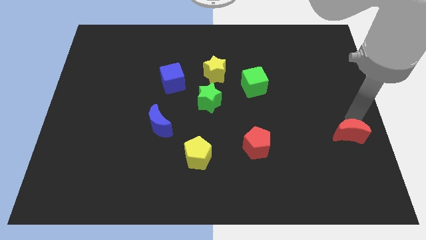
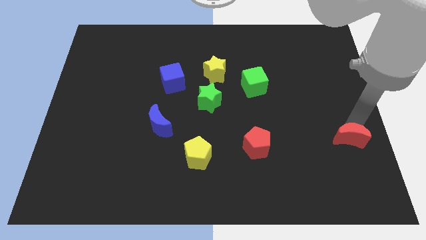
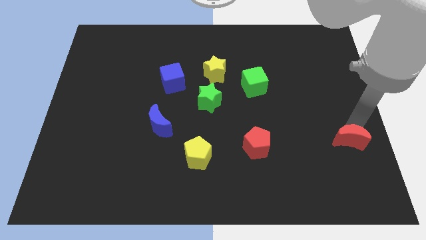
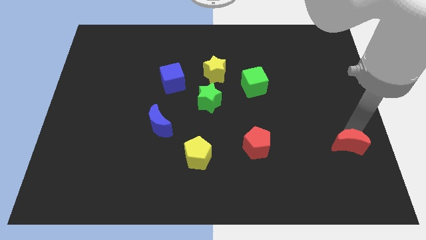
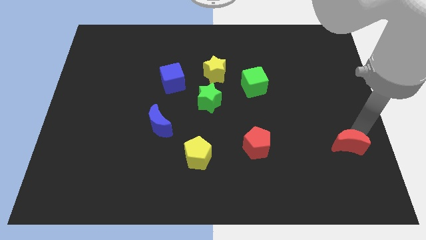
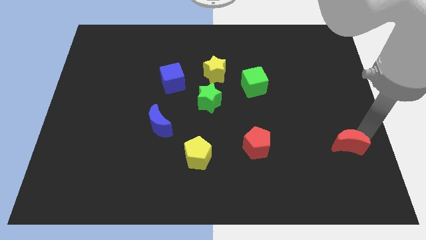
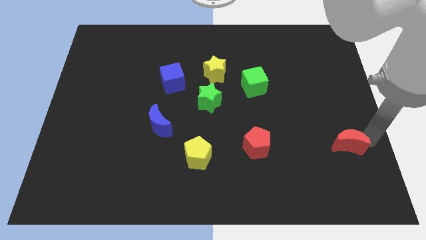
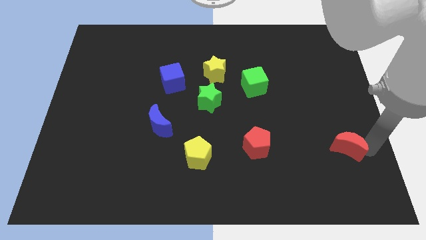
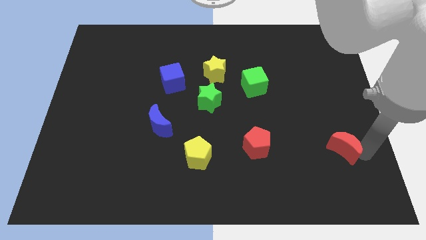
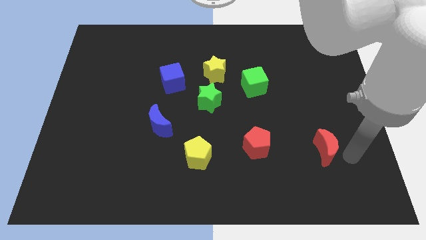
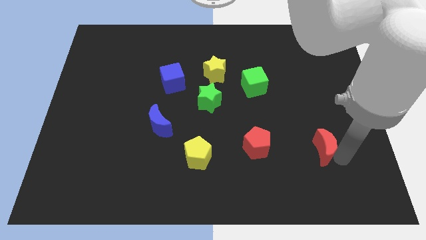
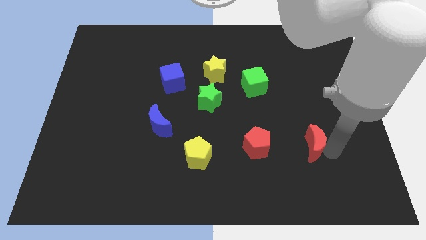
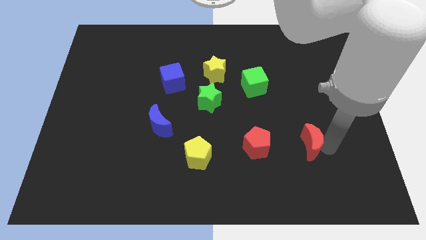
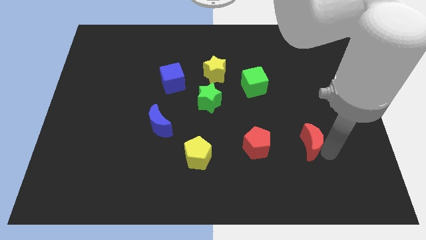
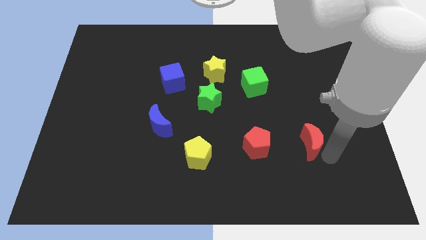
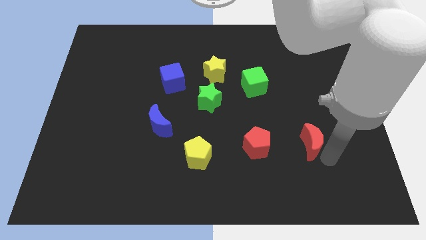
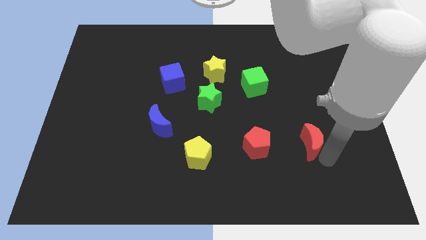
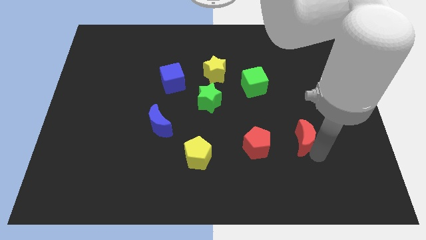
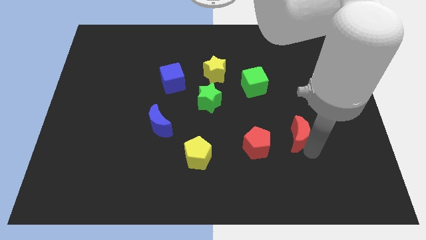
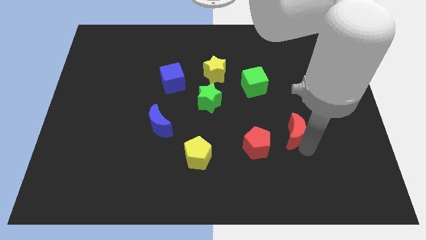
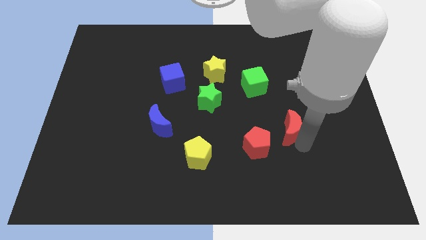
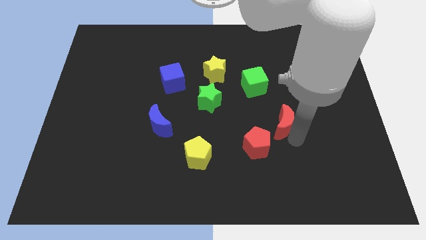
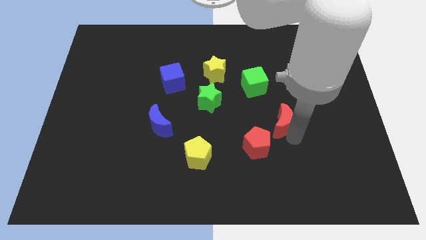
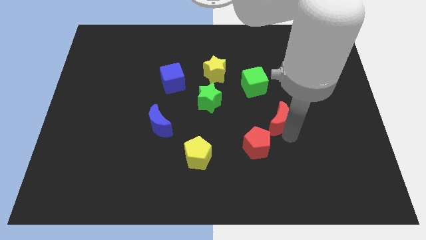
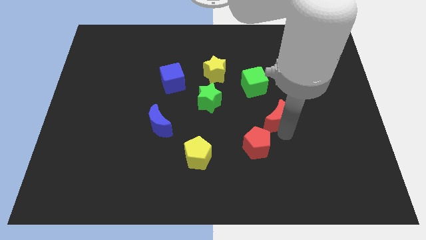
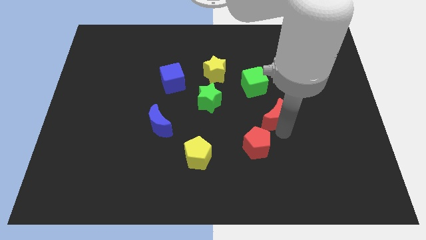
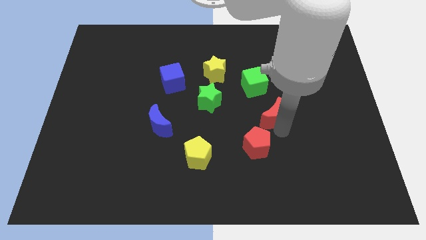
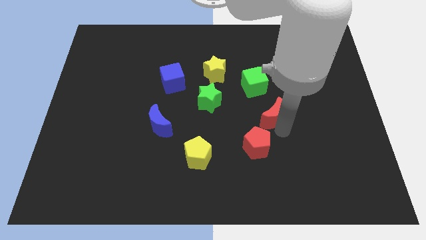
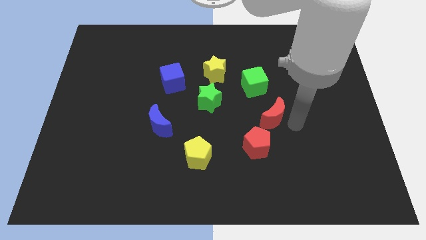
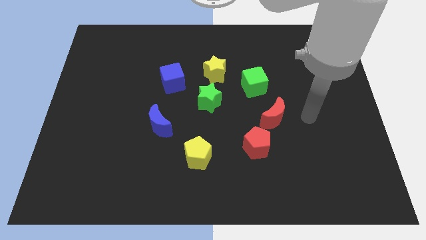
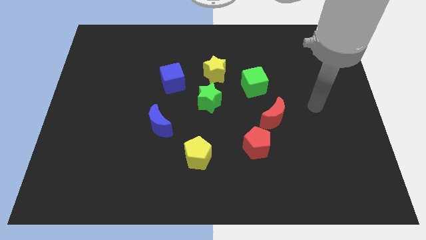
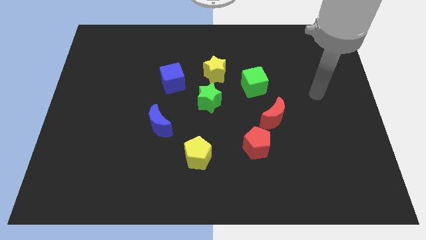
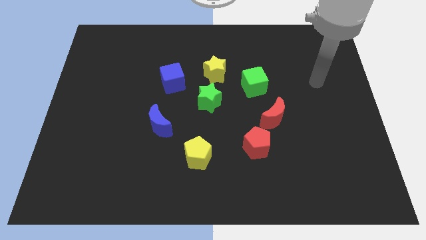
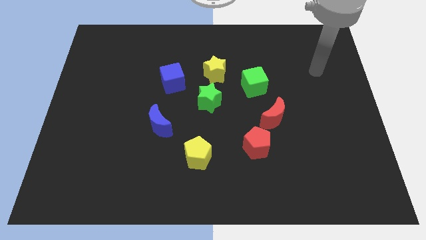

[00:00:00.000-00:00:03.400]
push the red moon to the top right of the red pentagon

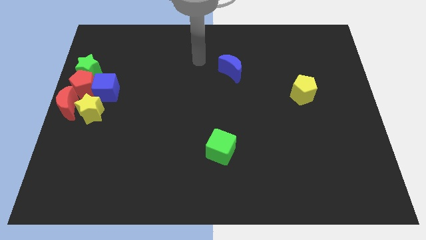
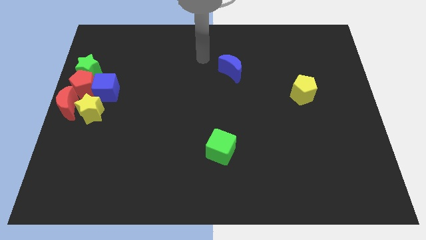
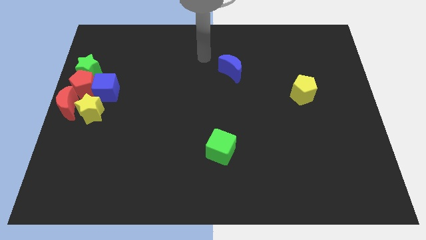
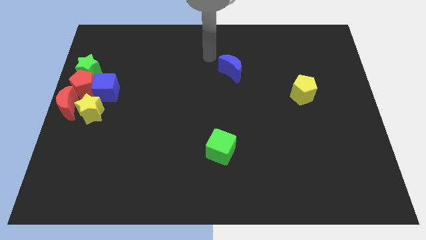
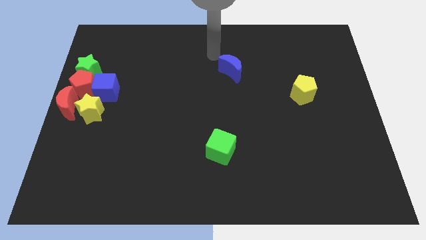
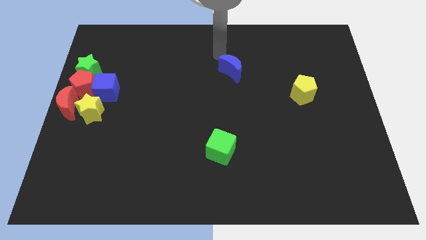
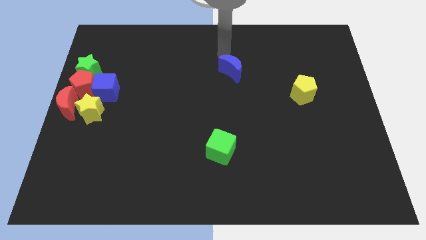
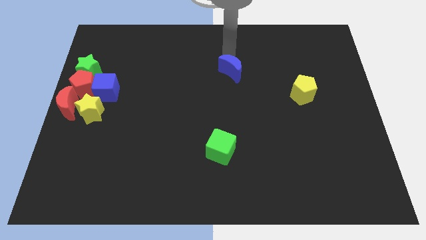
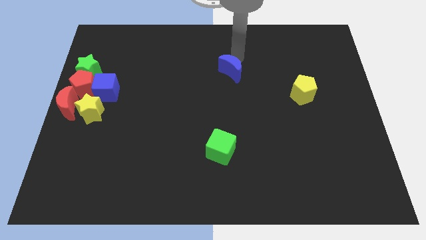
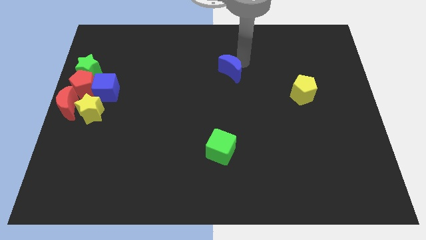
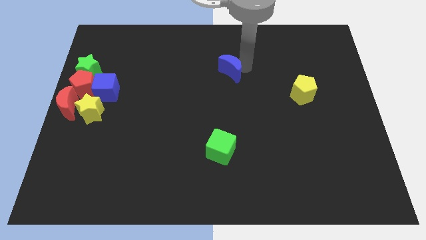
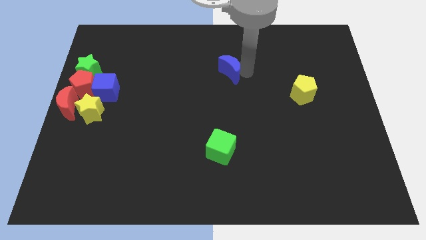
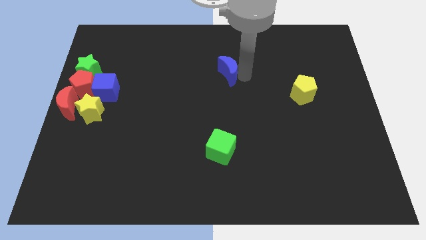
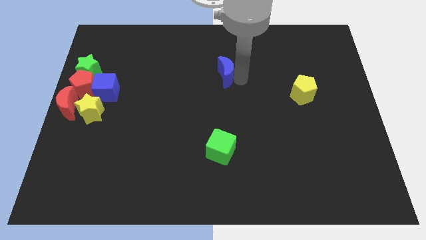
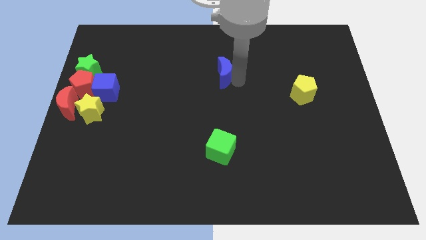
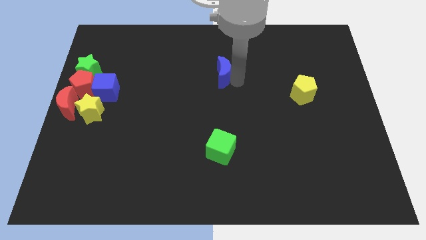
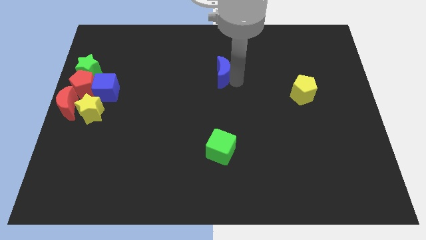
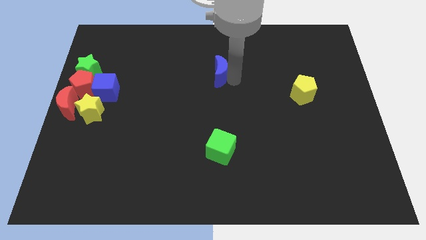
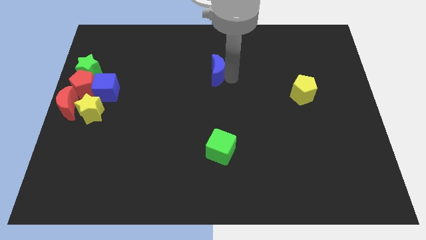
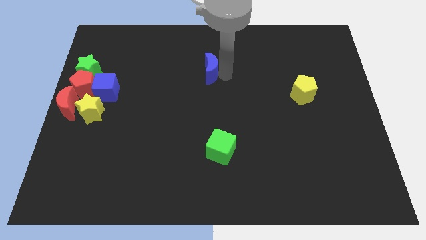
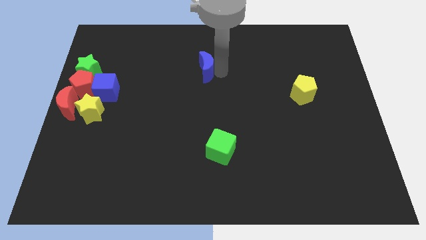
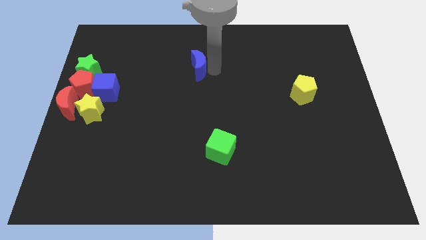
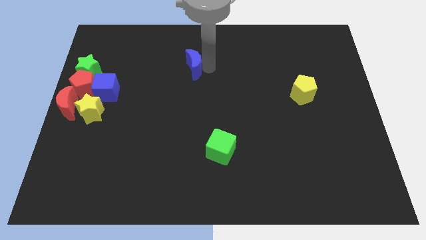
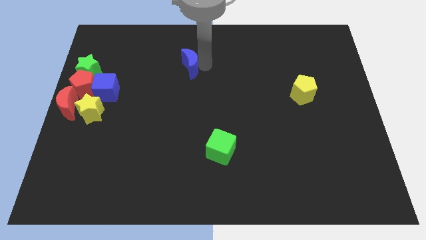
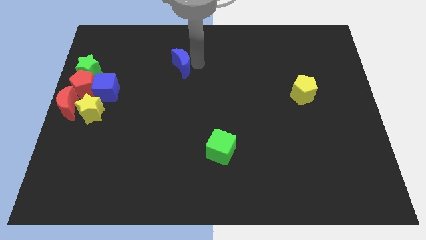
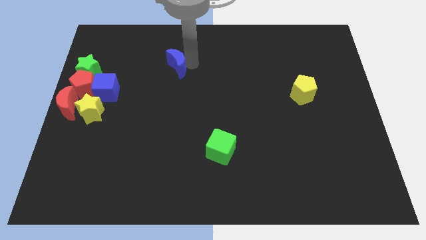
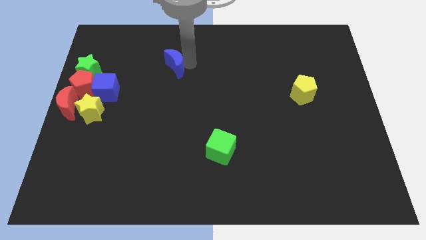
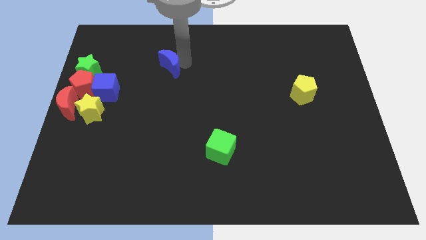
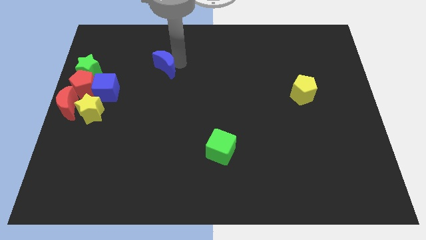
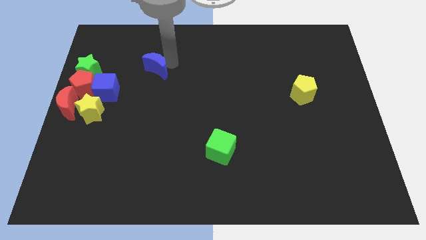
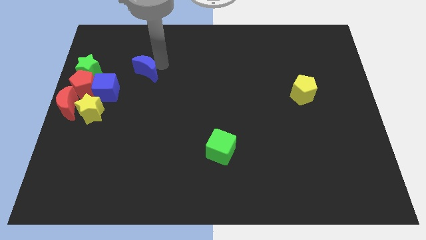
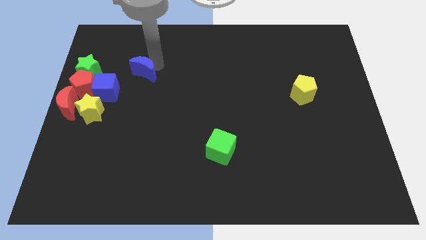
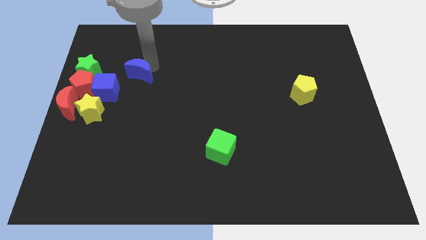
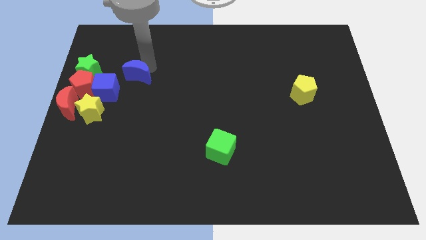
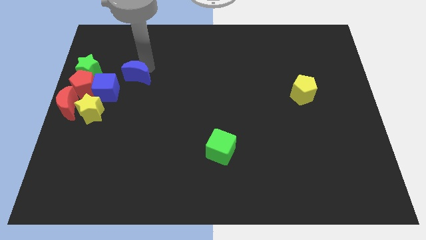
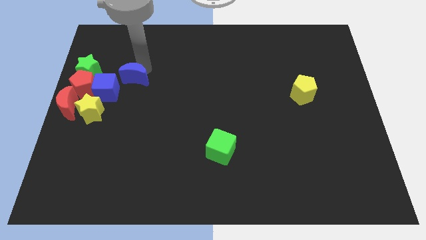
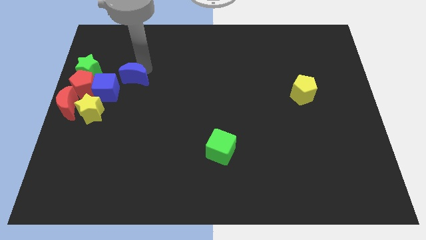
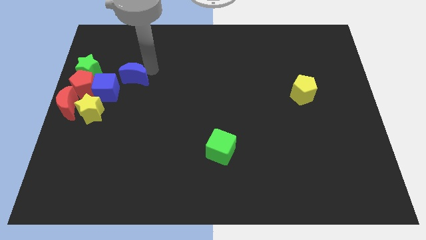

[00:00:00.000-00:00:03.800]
take the blue moon close to the blue cube

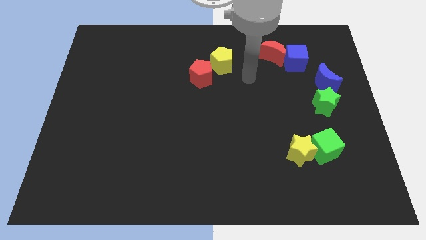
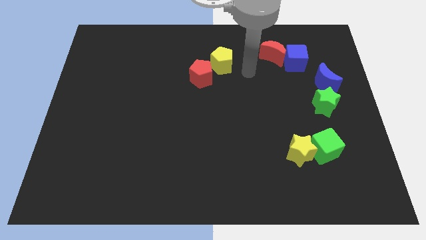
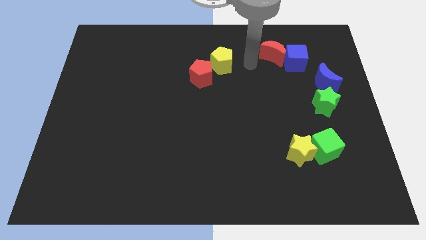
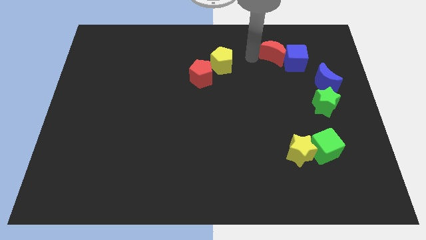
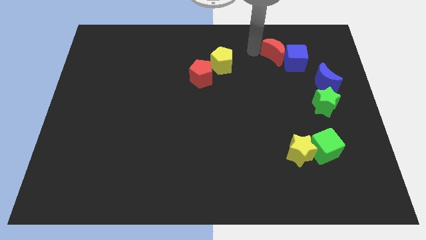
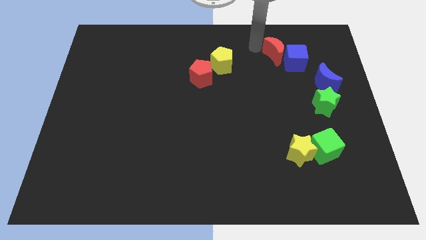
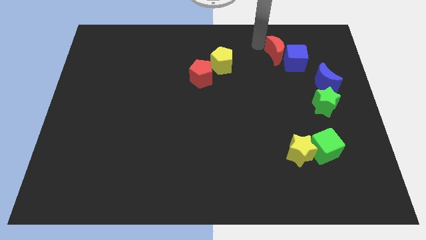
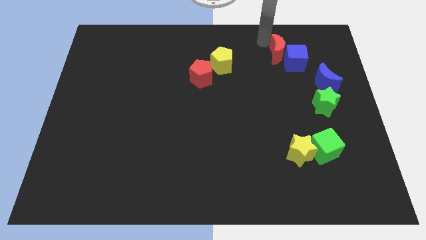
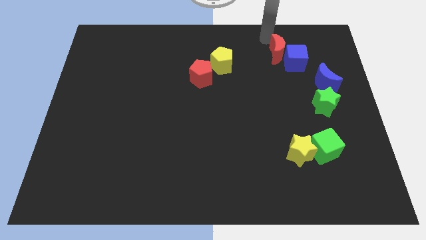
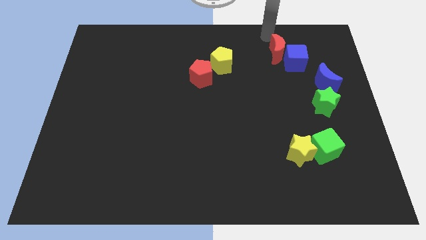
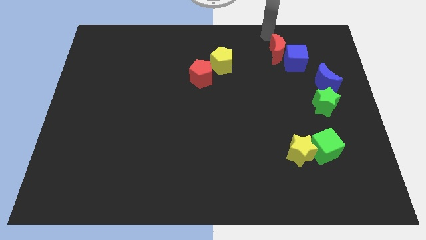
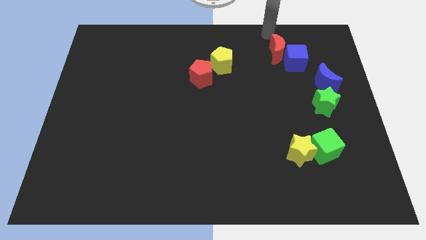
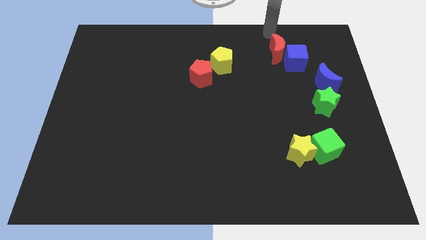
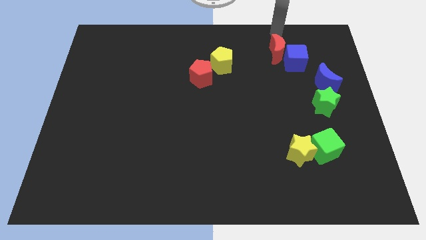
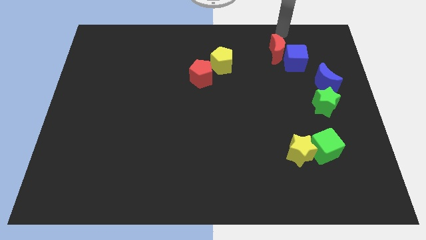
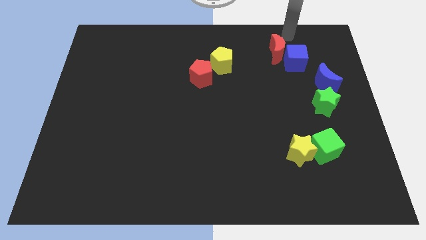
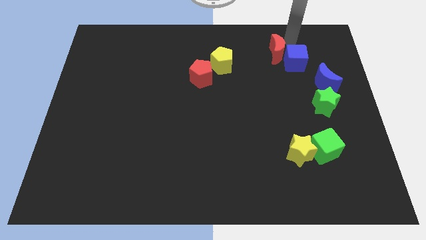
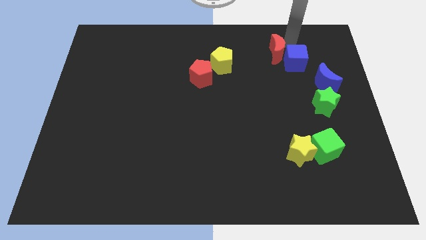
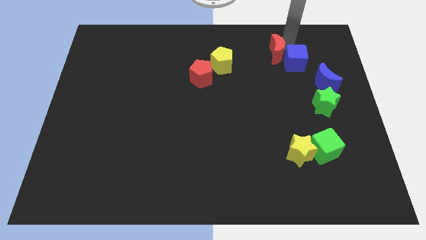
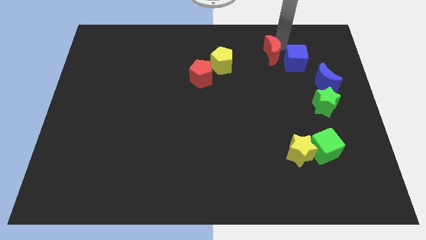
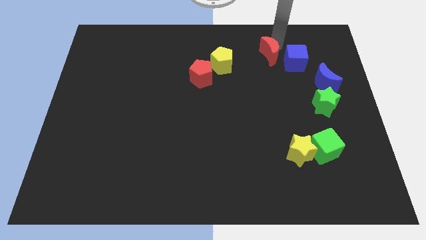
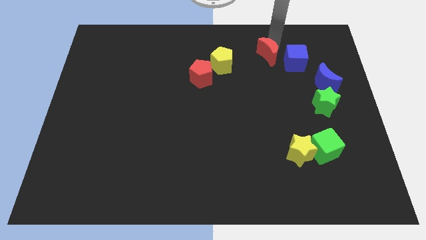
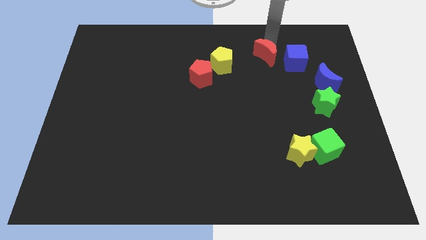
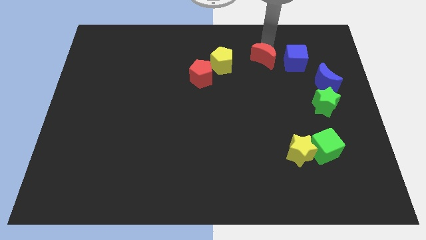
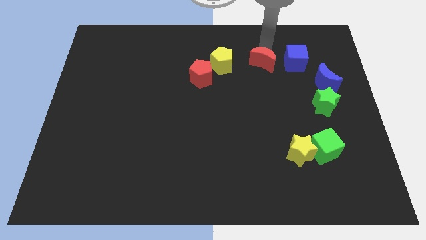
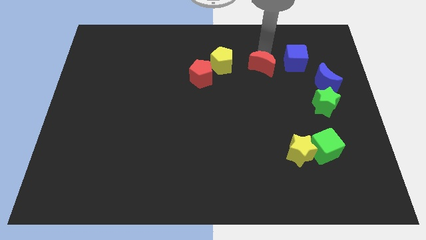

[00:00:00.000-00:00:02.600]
put the red moon in between the yellow pentagon and blue cube
